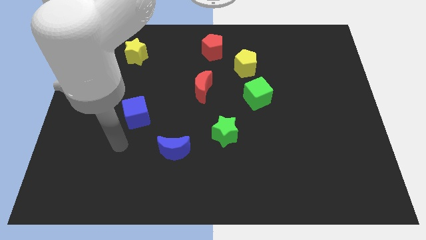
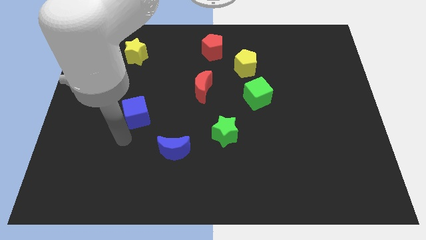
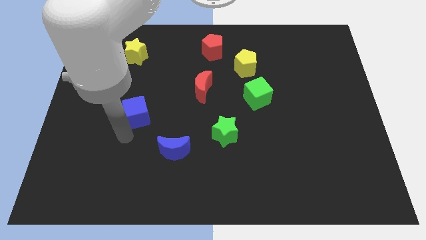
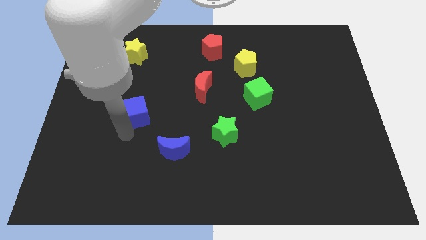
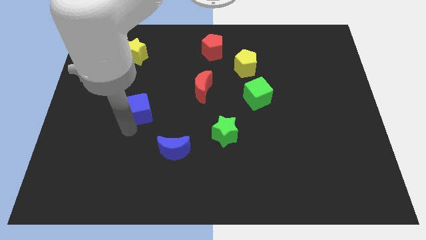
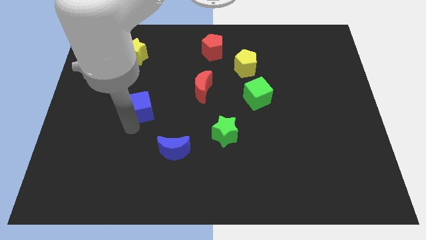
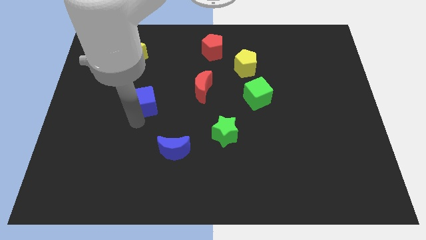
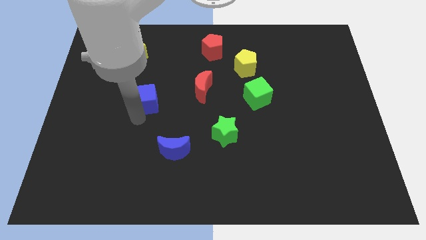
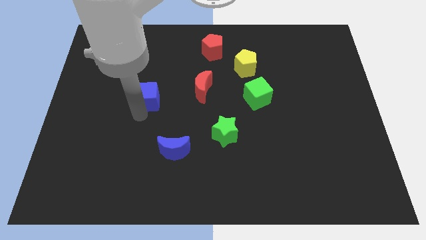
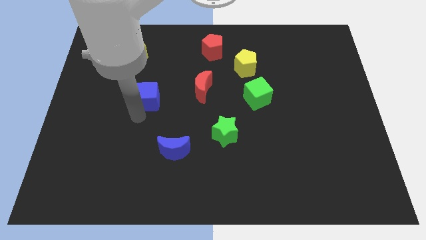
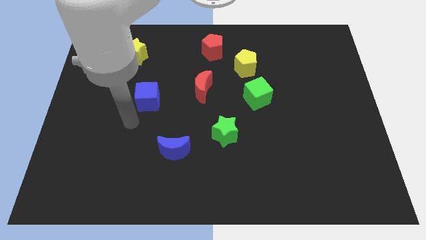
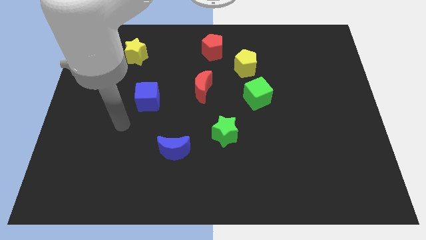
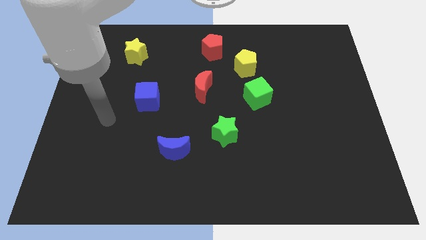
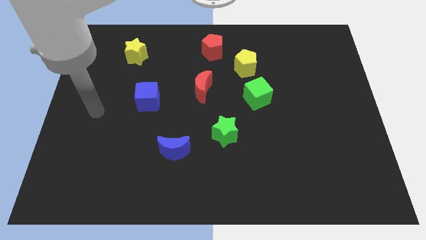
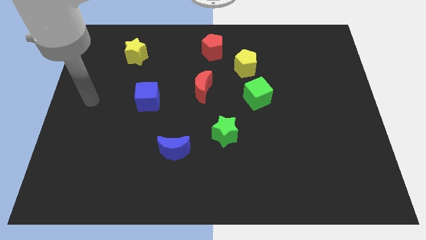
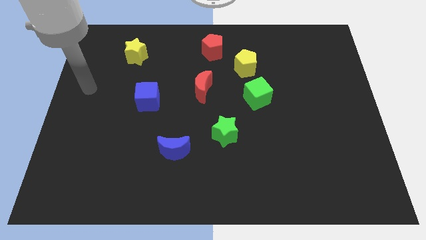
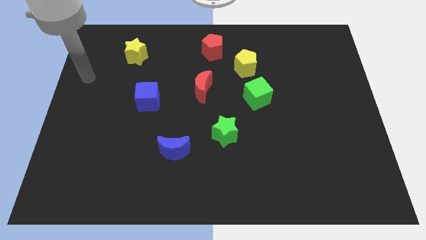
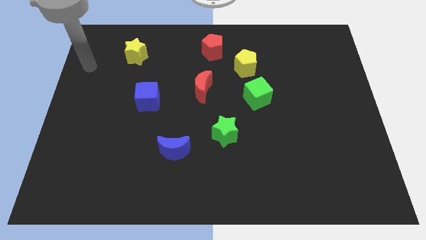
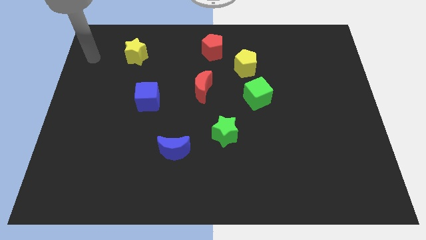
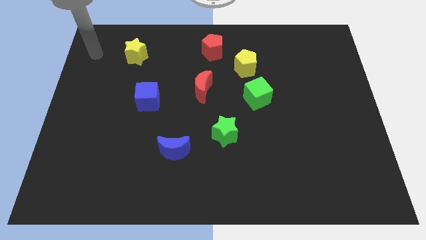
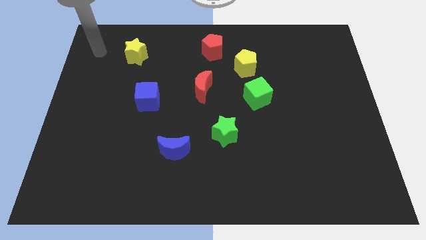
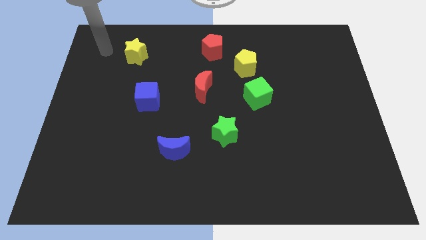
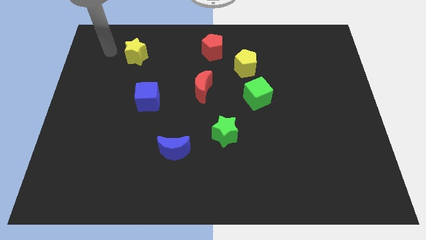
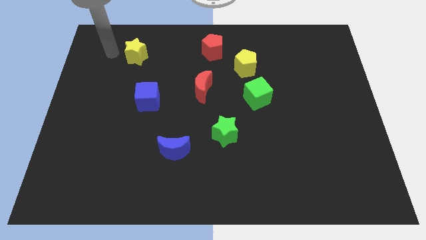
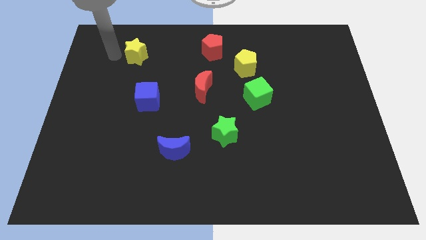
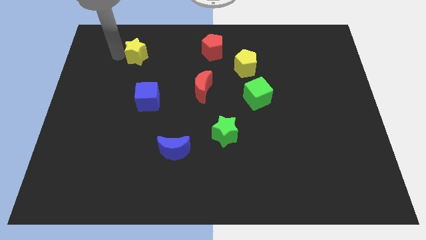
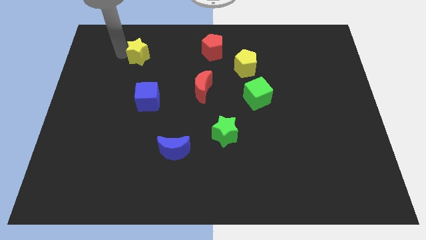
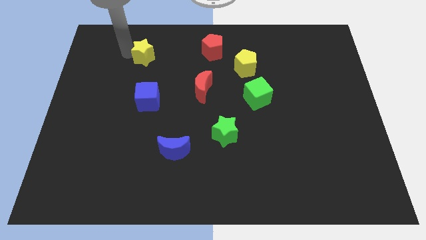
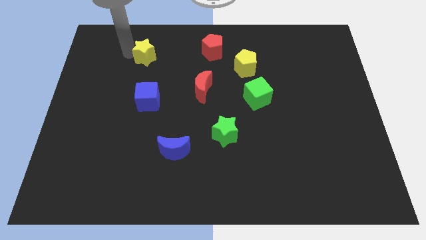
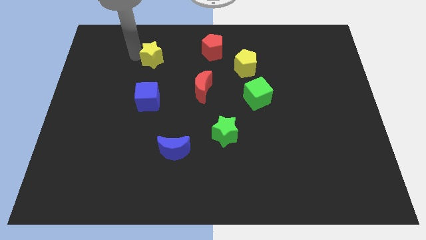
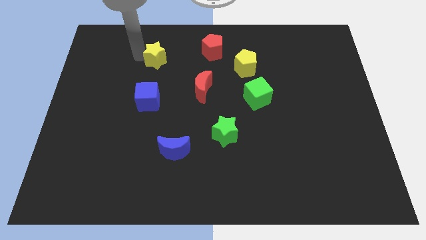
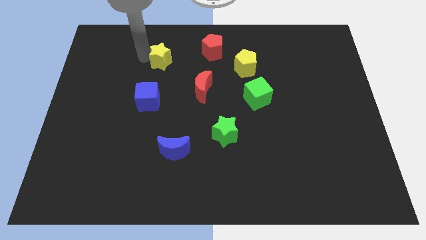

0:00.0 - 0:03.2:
place the yellow star vertically above the blue cube

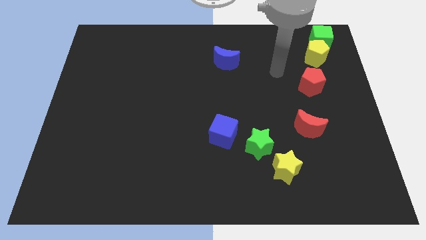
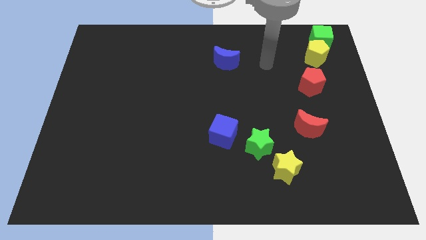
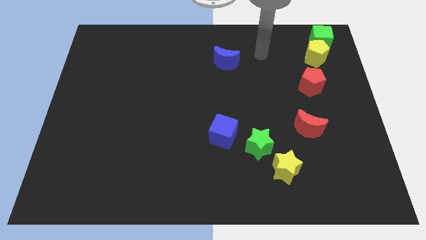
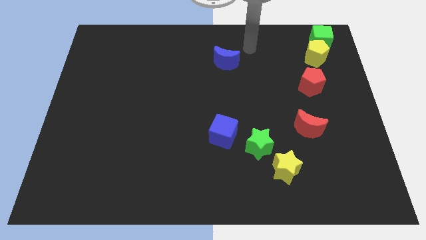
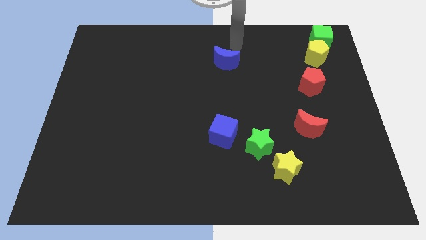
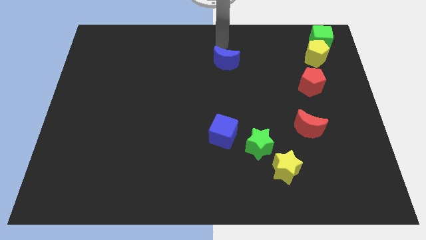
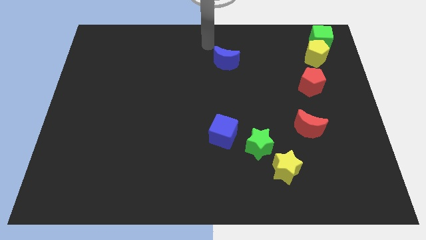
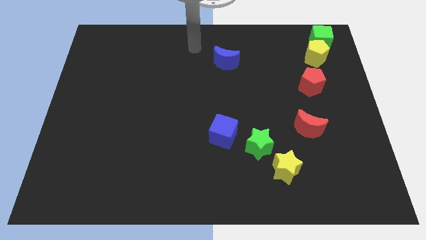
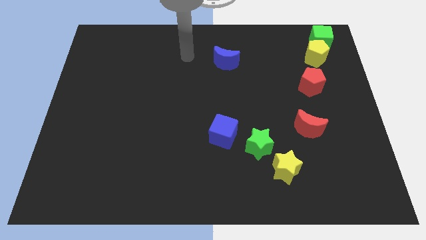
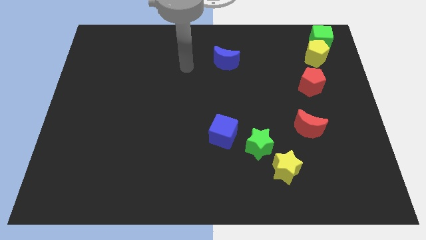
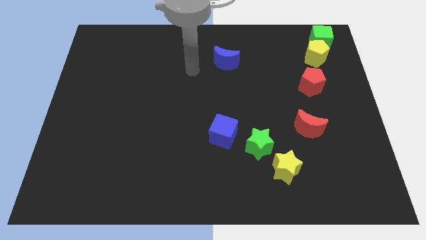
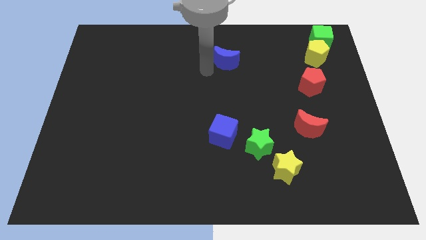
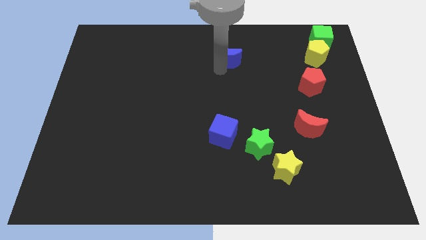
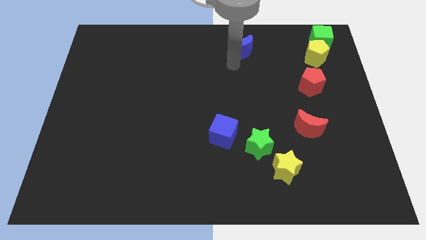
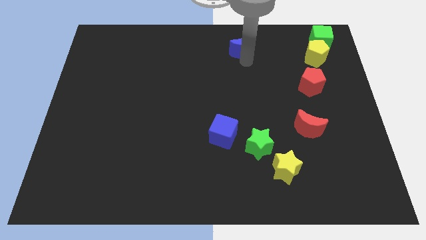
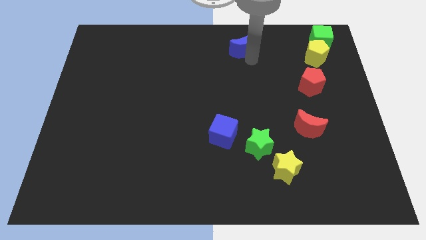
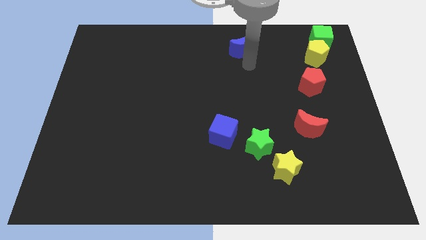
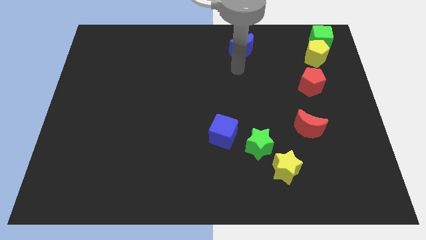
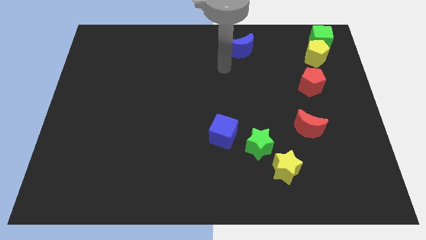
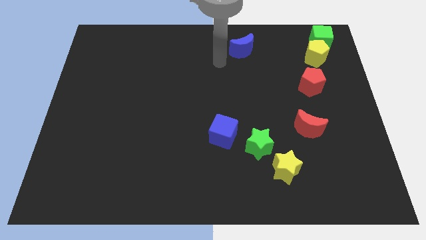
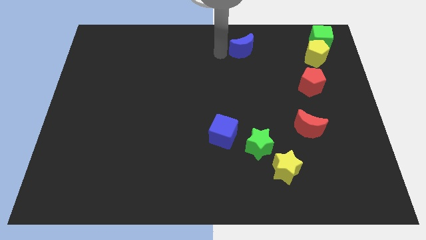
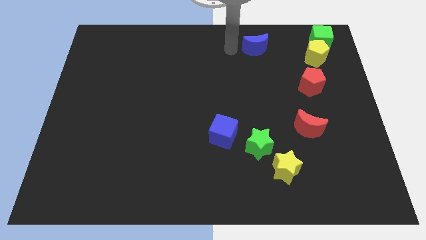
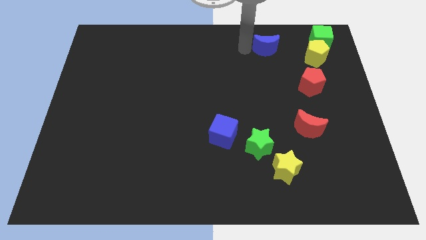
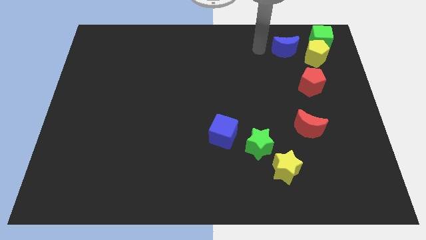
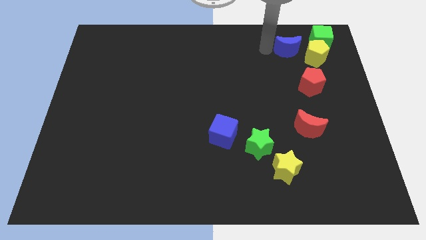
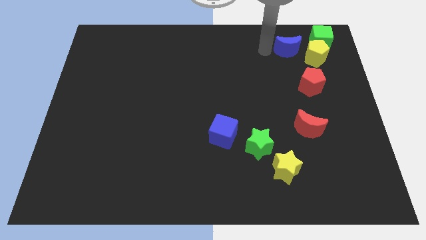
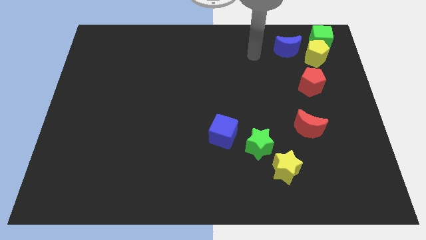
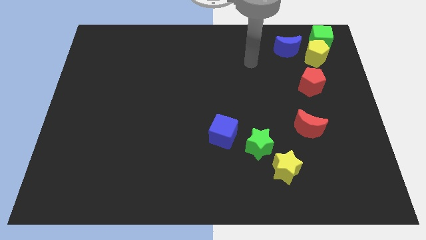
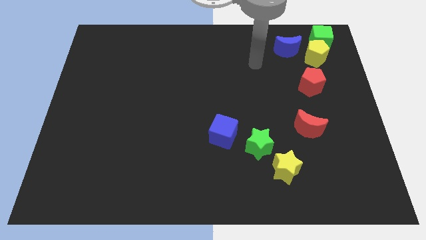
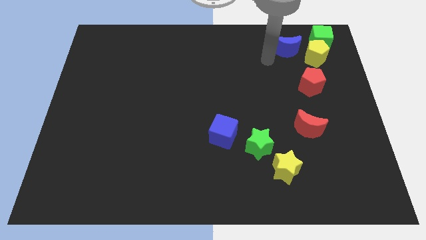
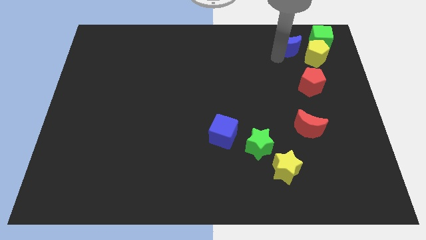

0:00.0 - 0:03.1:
place blue moon to top left of yellow pentagon

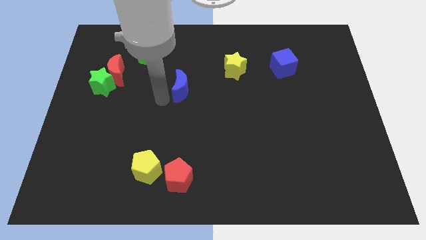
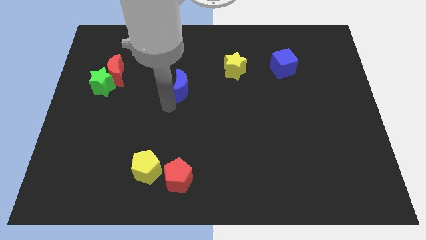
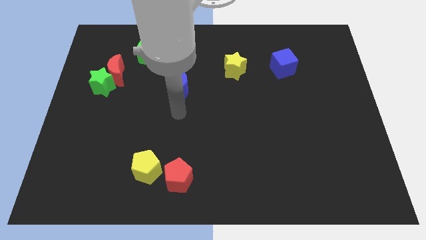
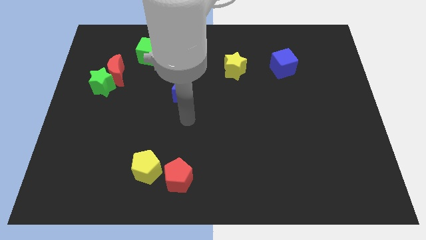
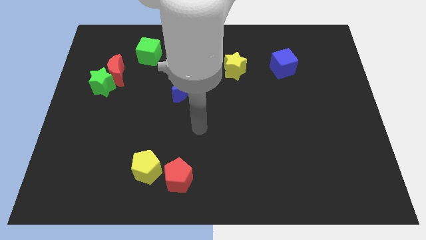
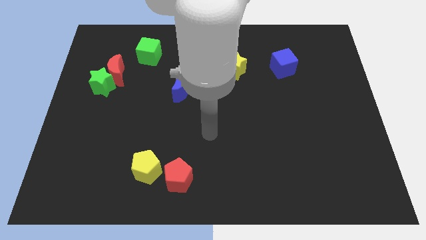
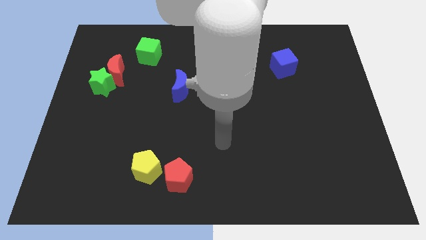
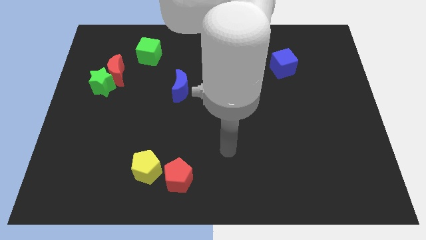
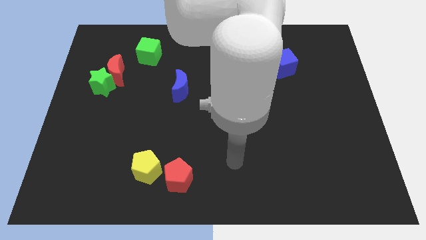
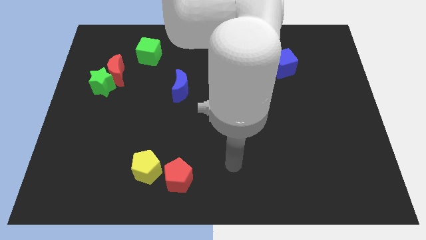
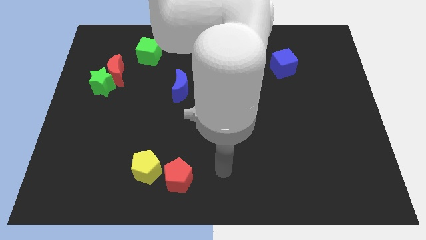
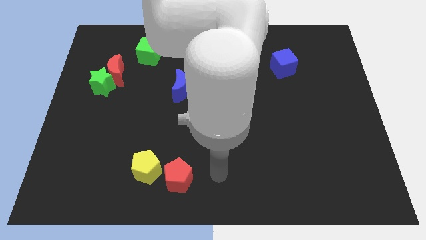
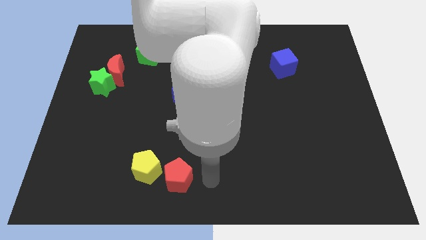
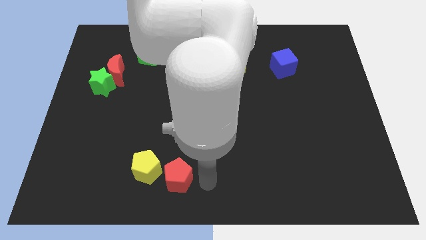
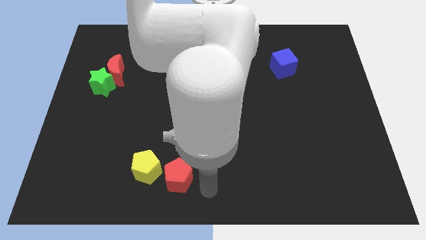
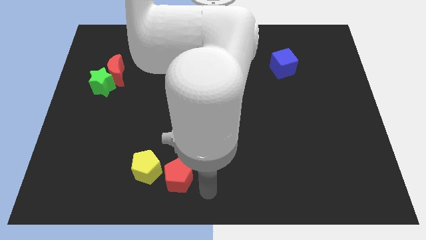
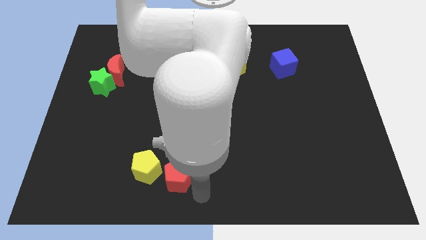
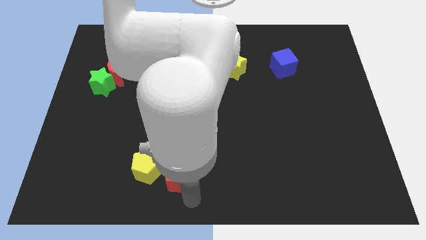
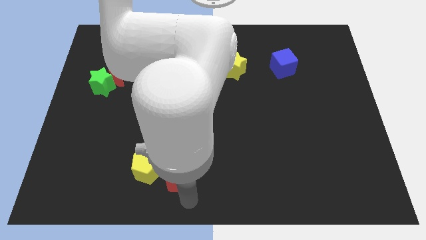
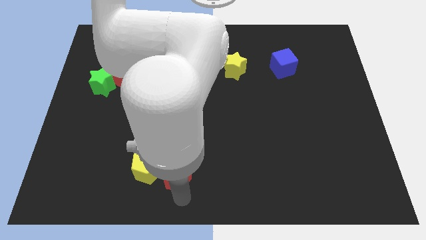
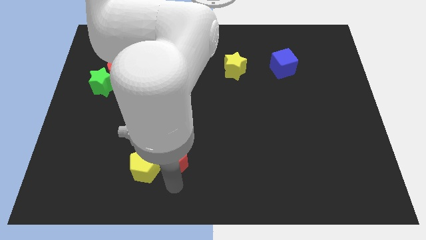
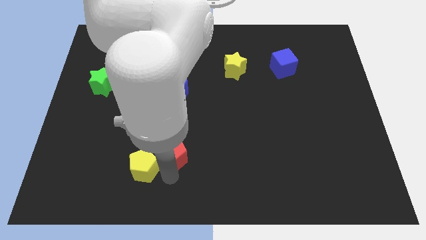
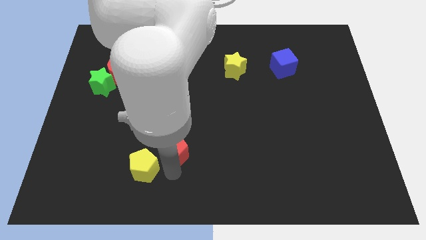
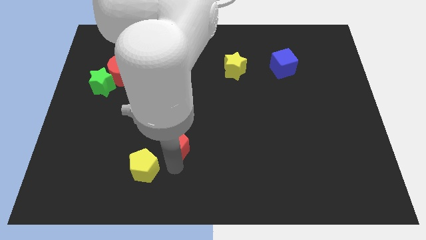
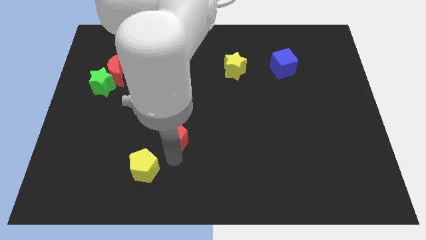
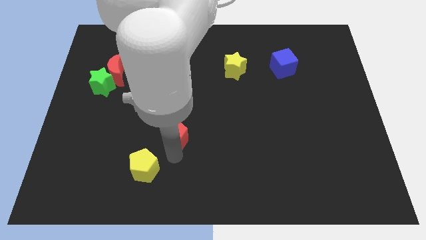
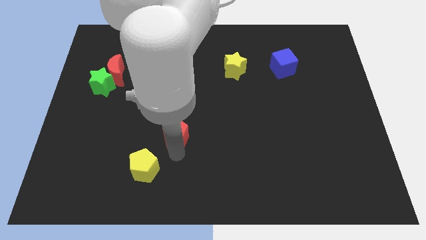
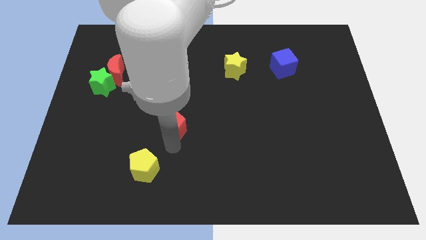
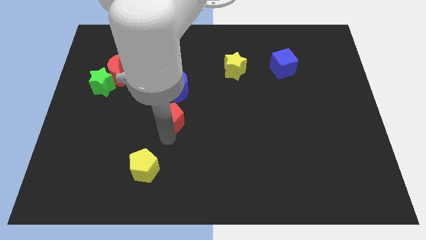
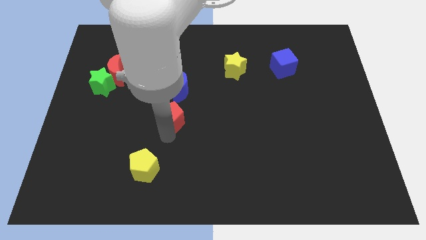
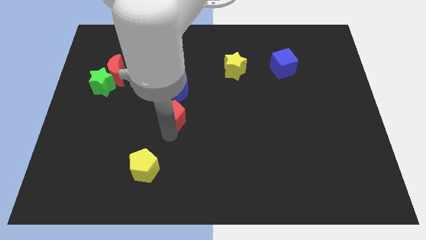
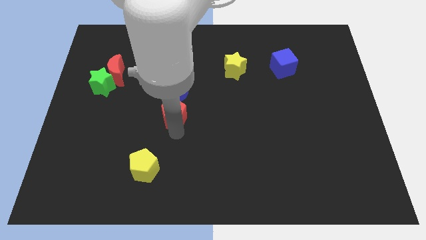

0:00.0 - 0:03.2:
place the red pentagon in between the blue crescent and yellow pentagon
